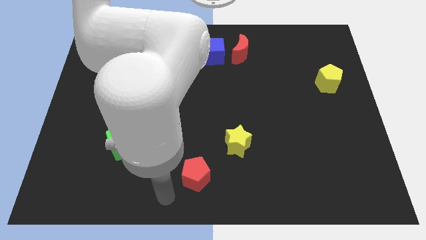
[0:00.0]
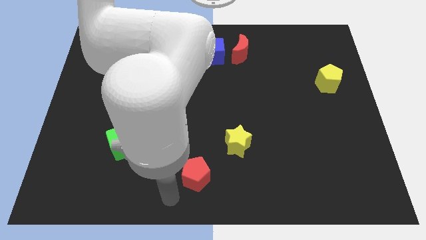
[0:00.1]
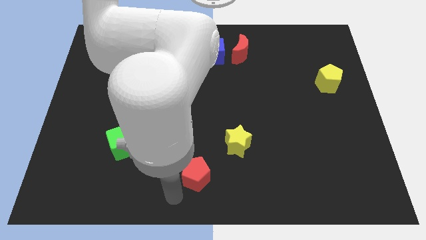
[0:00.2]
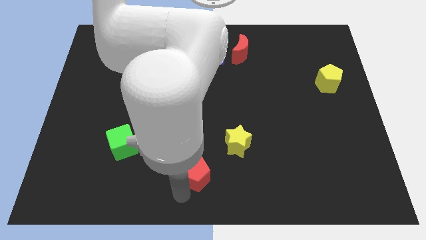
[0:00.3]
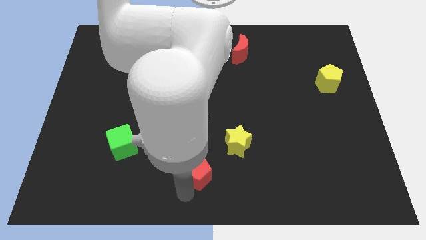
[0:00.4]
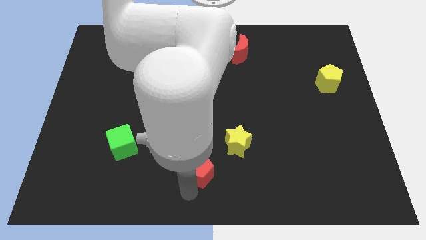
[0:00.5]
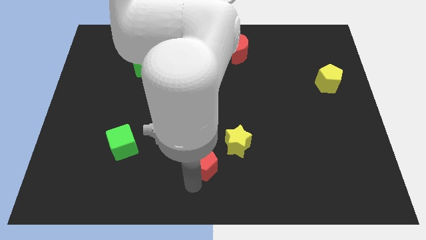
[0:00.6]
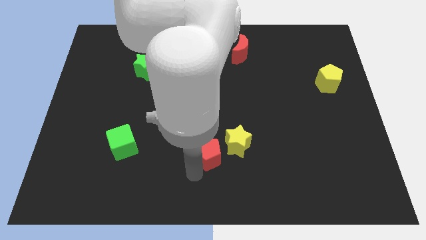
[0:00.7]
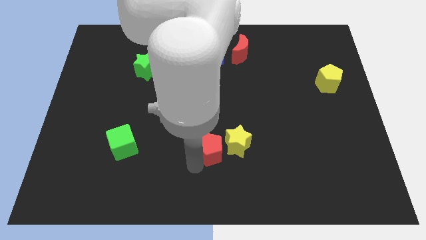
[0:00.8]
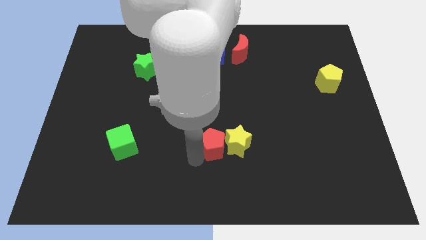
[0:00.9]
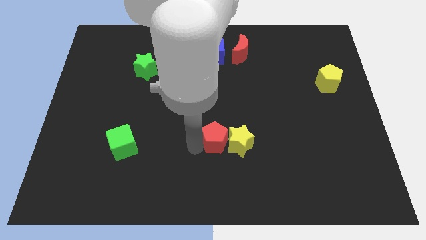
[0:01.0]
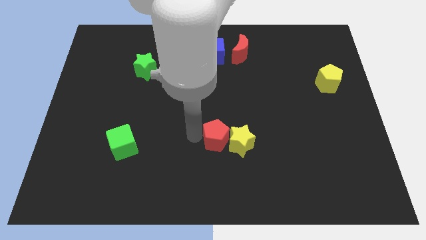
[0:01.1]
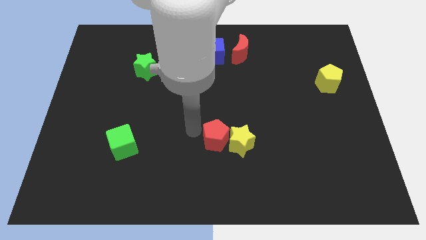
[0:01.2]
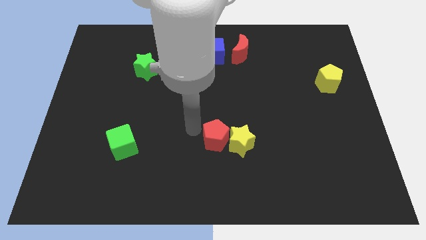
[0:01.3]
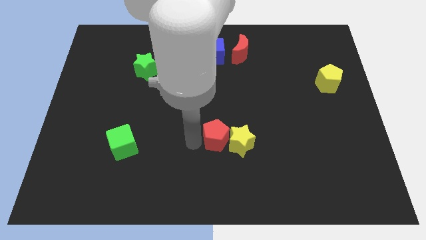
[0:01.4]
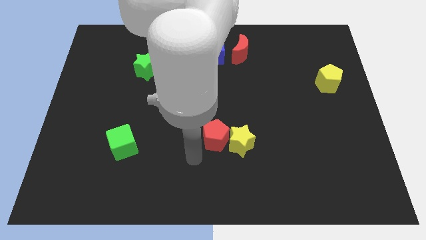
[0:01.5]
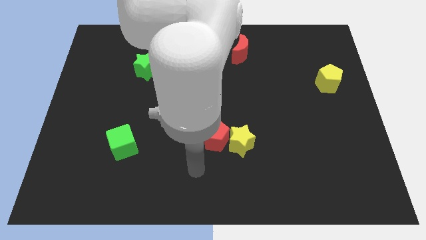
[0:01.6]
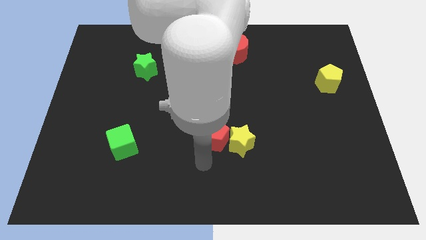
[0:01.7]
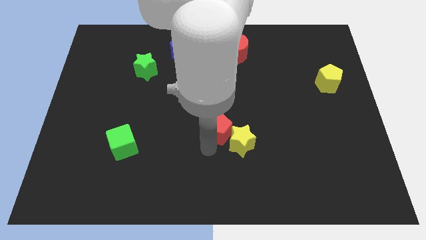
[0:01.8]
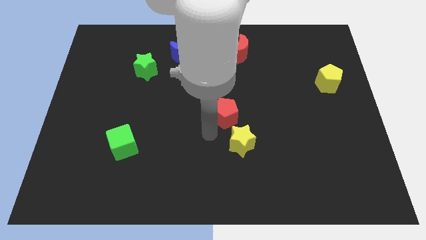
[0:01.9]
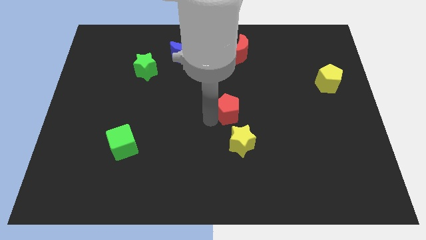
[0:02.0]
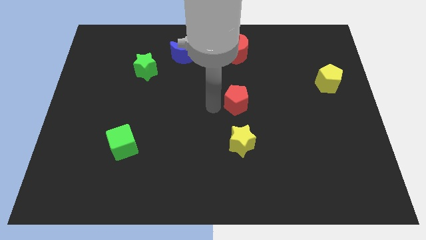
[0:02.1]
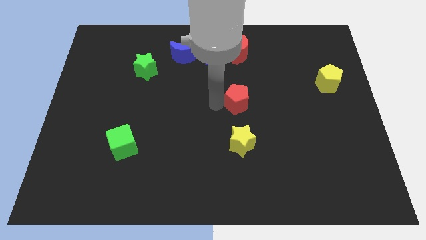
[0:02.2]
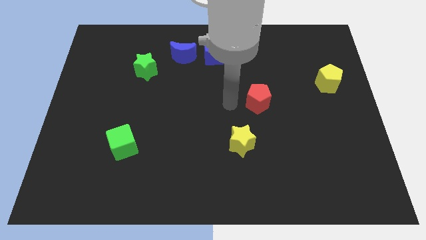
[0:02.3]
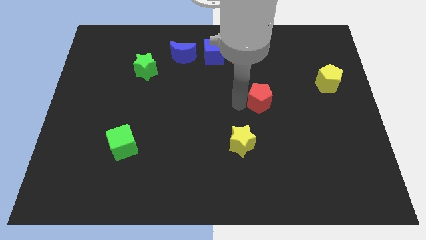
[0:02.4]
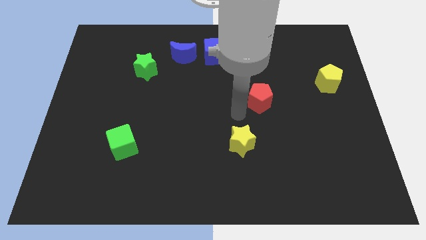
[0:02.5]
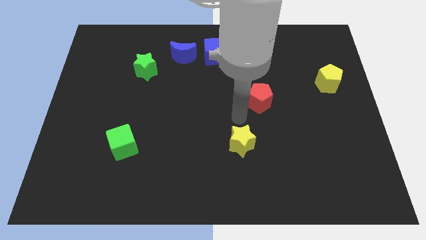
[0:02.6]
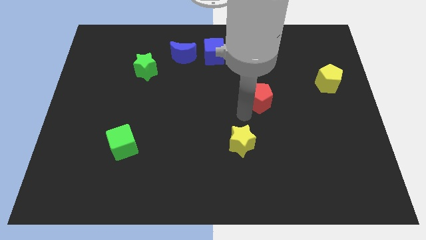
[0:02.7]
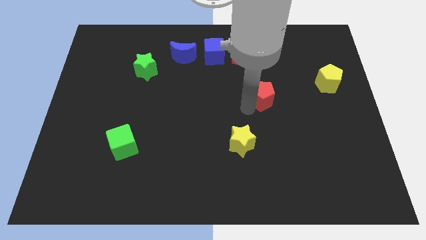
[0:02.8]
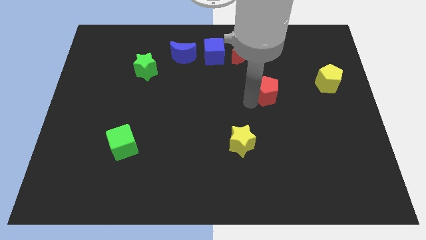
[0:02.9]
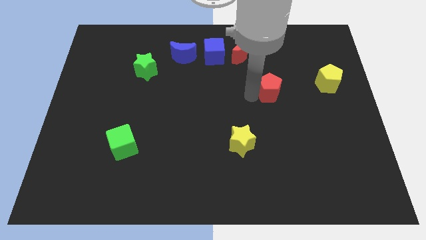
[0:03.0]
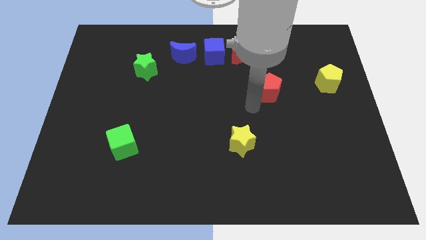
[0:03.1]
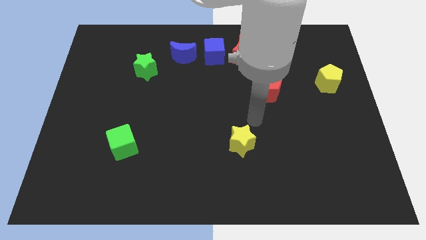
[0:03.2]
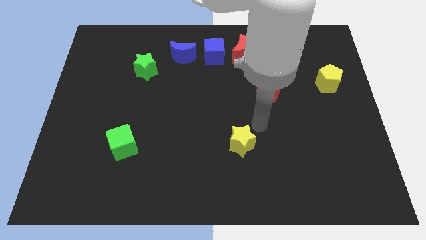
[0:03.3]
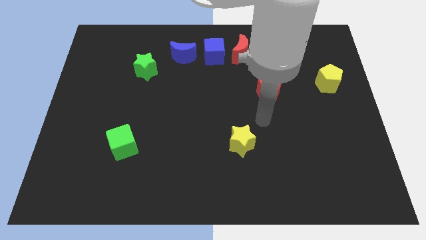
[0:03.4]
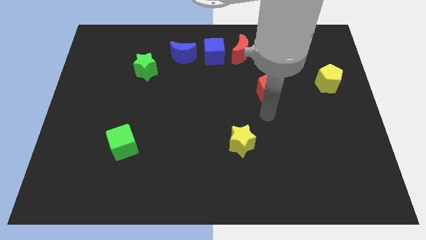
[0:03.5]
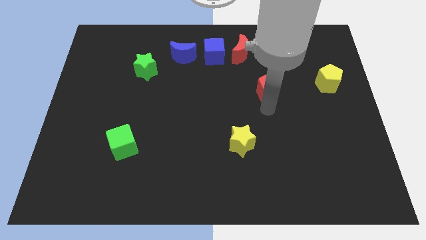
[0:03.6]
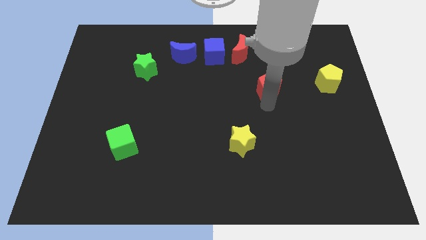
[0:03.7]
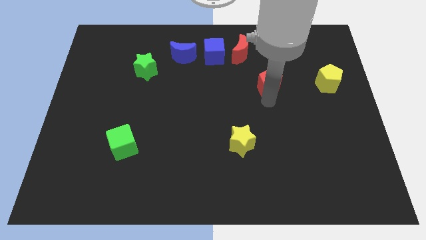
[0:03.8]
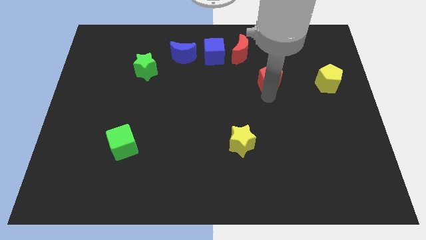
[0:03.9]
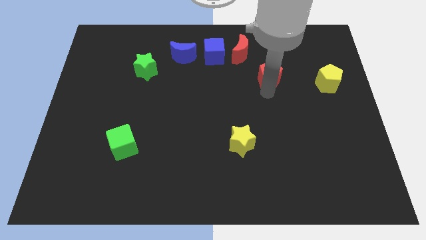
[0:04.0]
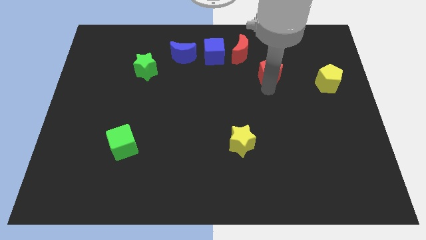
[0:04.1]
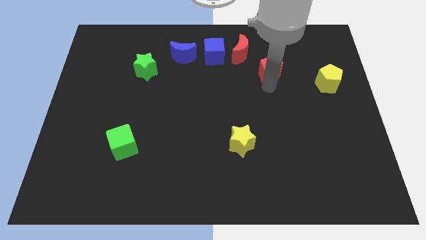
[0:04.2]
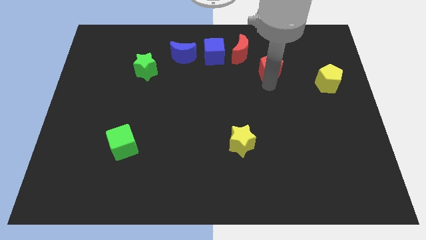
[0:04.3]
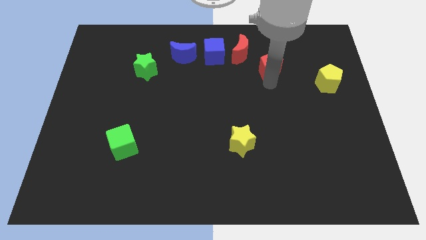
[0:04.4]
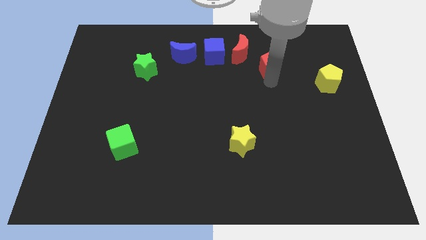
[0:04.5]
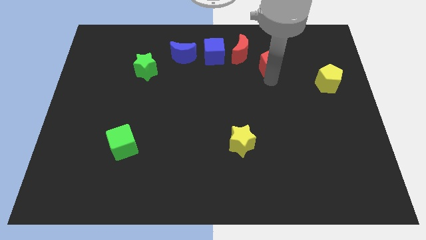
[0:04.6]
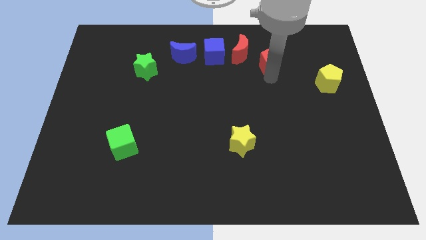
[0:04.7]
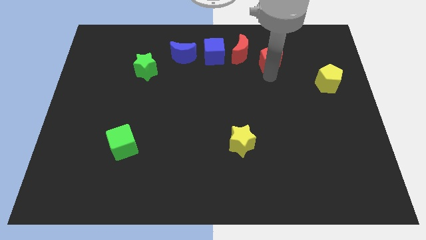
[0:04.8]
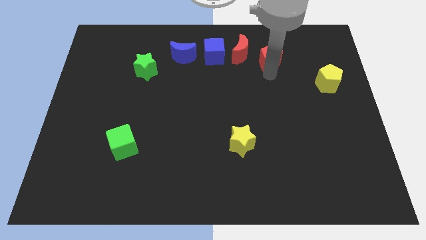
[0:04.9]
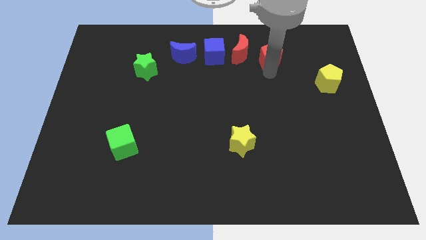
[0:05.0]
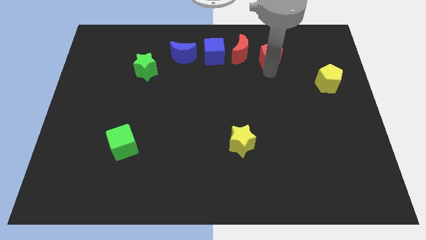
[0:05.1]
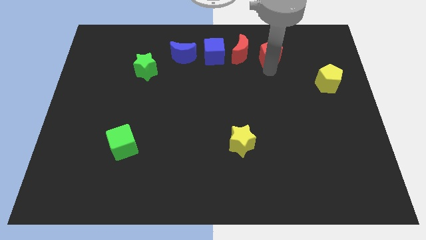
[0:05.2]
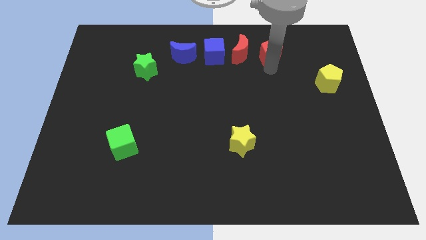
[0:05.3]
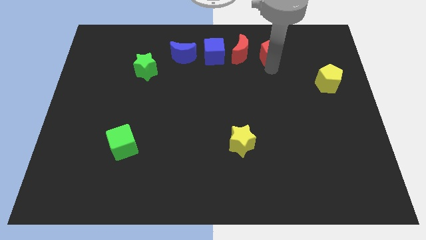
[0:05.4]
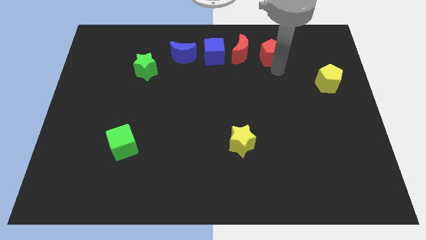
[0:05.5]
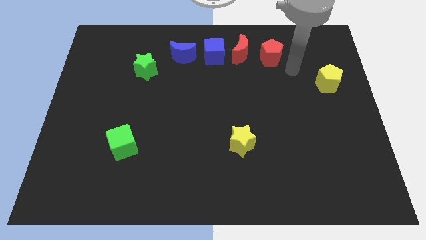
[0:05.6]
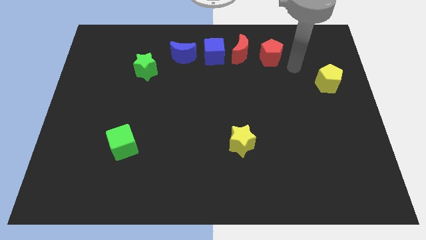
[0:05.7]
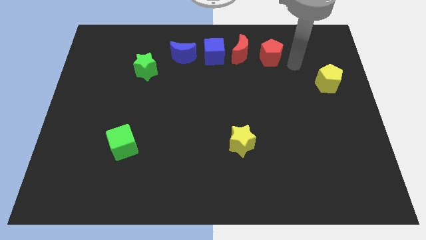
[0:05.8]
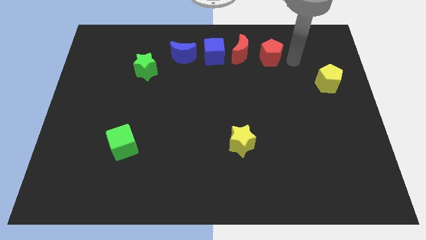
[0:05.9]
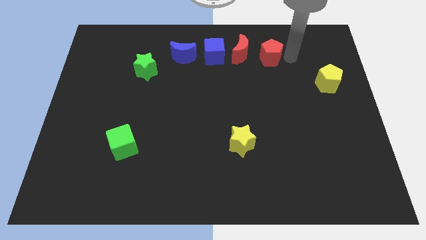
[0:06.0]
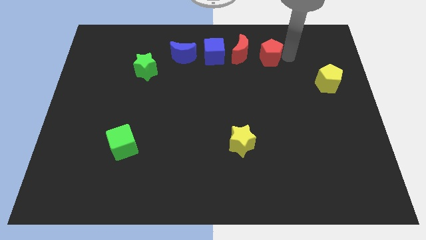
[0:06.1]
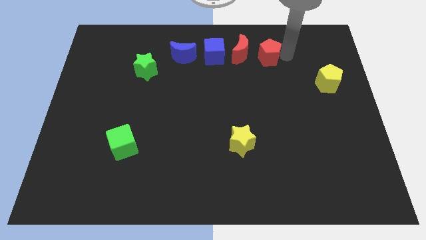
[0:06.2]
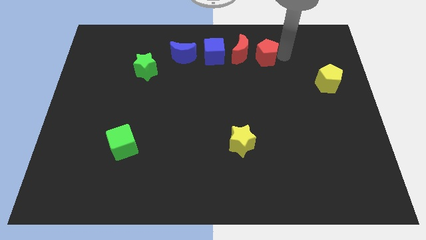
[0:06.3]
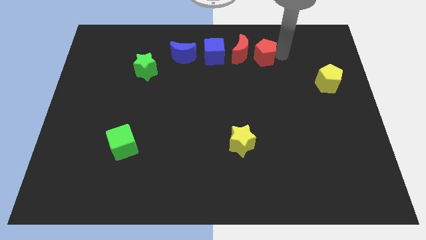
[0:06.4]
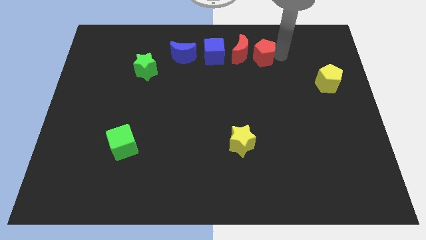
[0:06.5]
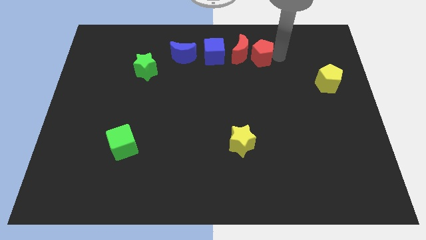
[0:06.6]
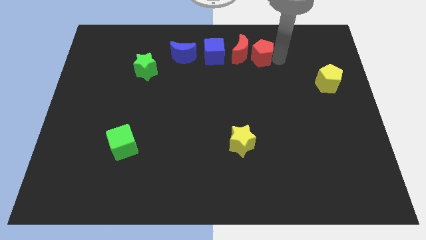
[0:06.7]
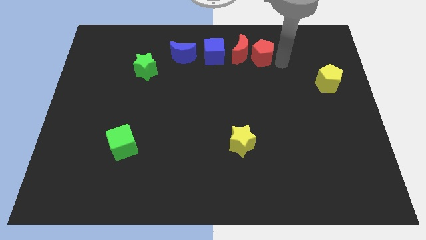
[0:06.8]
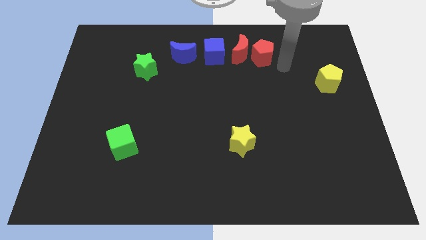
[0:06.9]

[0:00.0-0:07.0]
push the red pentagon to form a horizontal line with three blocks

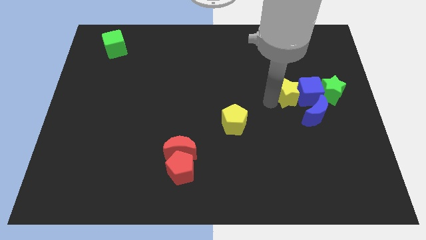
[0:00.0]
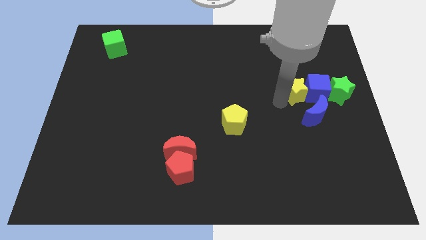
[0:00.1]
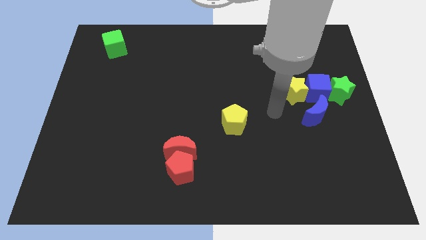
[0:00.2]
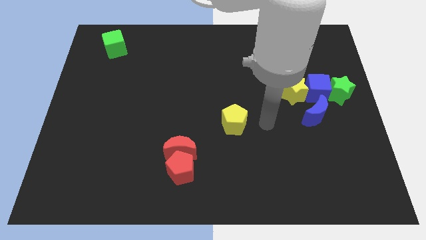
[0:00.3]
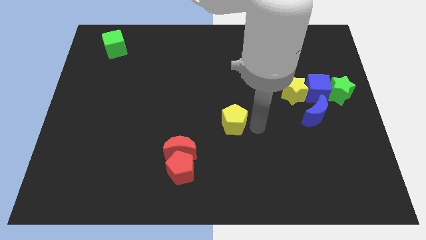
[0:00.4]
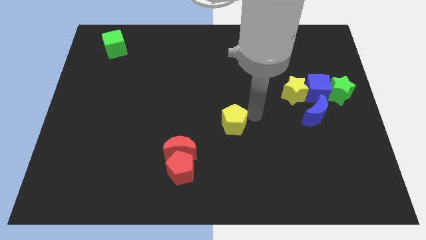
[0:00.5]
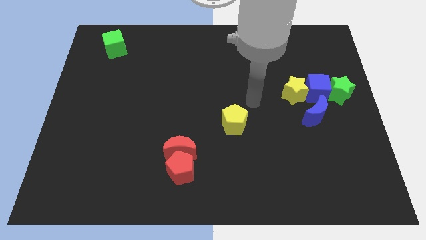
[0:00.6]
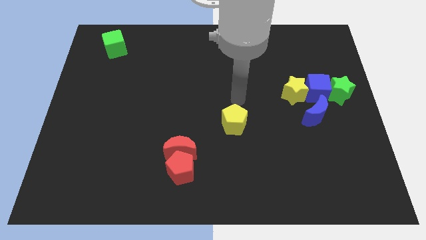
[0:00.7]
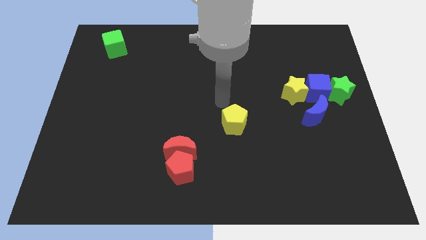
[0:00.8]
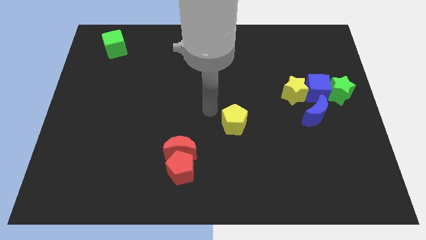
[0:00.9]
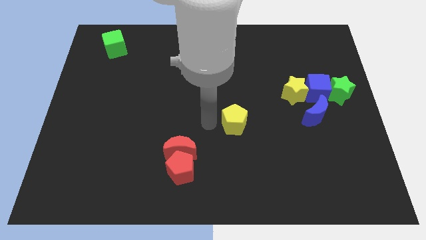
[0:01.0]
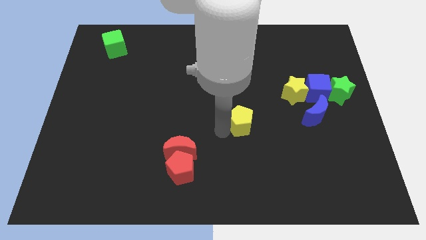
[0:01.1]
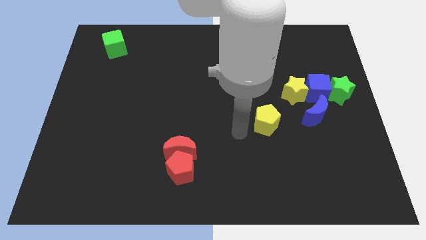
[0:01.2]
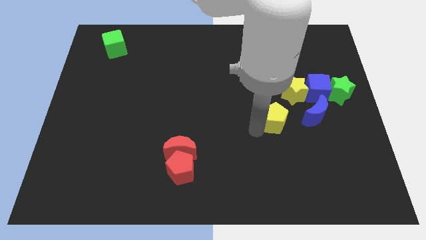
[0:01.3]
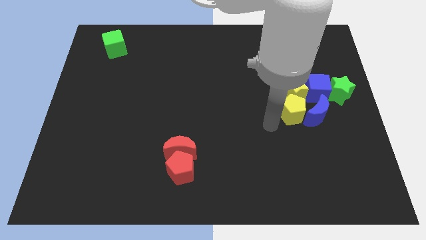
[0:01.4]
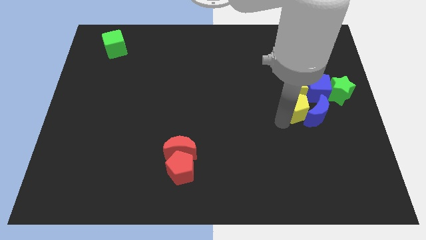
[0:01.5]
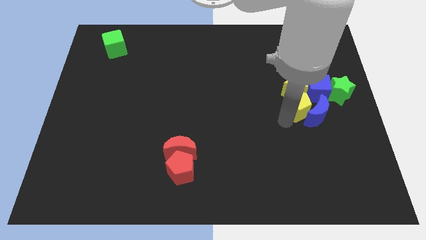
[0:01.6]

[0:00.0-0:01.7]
put yellow blocks together
